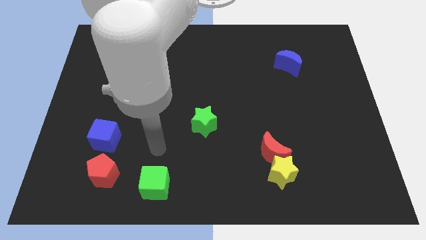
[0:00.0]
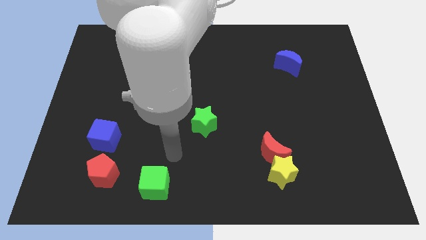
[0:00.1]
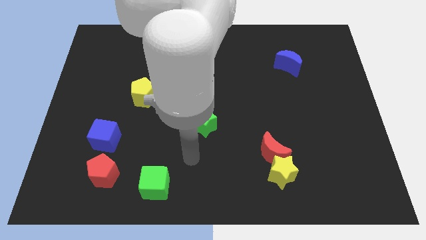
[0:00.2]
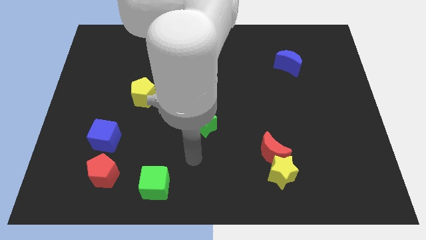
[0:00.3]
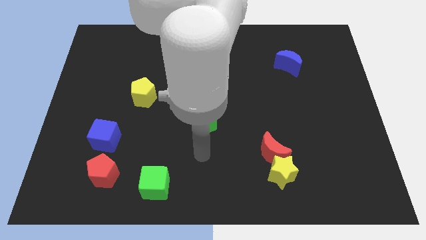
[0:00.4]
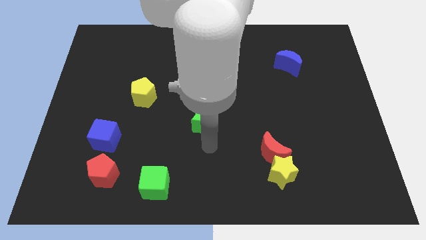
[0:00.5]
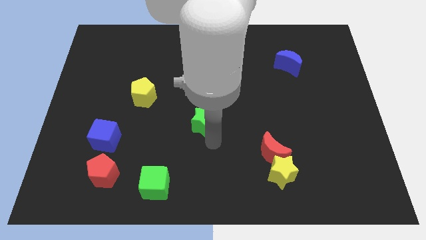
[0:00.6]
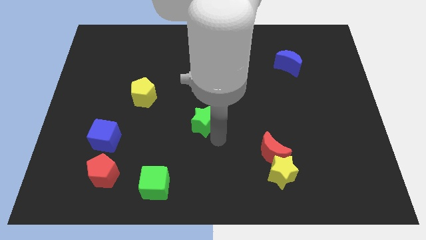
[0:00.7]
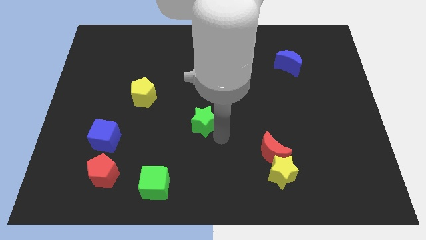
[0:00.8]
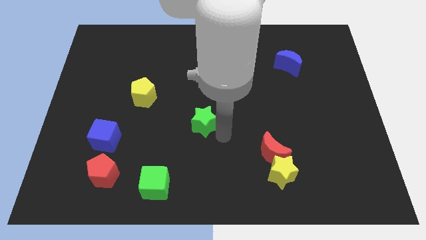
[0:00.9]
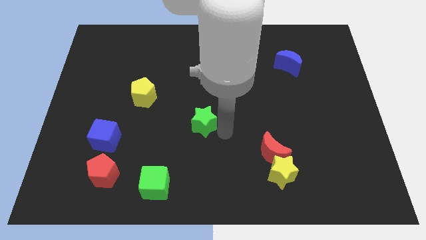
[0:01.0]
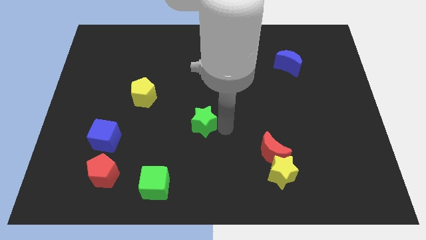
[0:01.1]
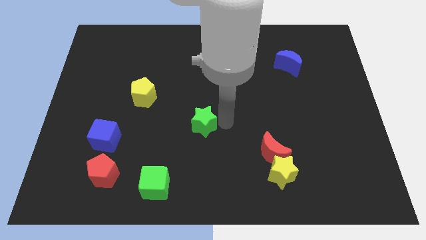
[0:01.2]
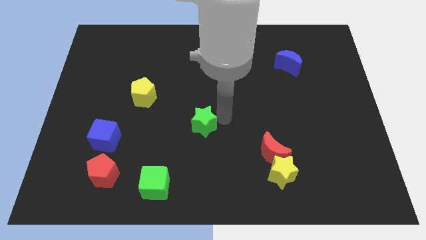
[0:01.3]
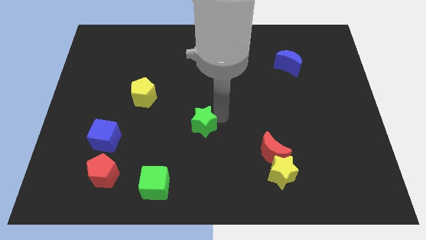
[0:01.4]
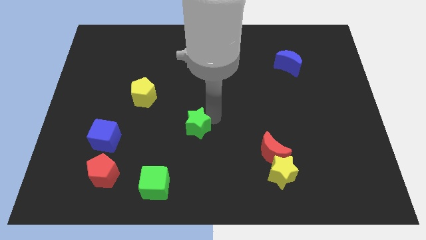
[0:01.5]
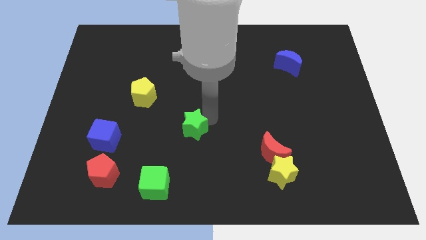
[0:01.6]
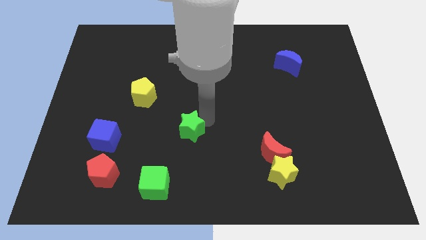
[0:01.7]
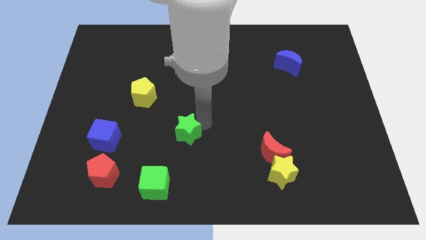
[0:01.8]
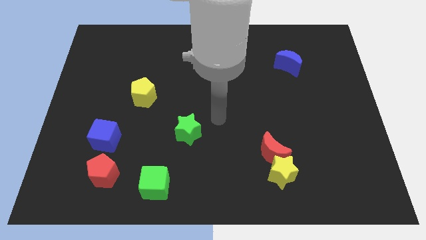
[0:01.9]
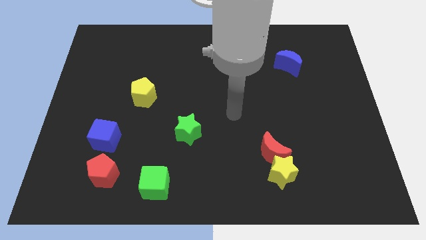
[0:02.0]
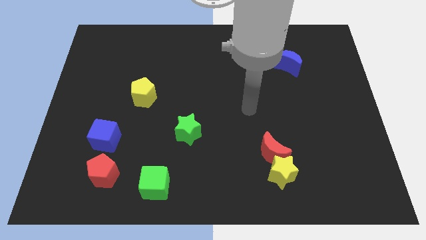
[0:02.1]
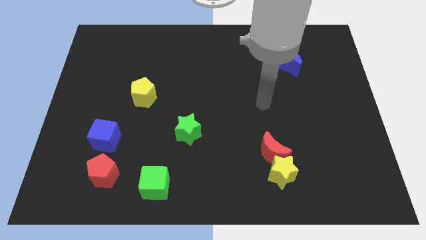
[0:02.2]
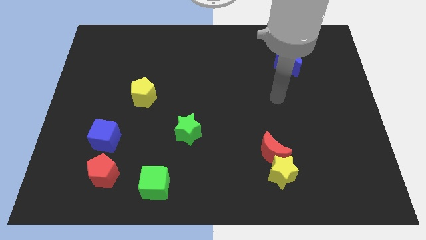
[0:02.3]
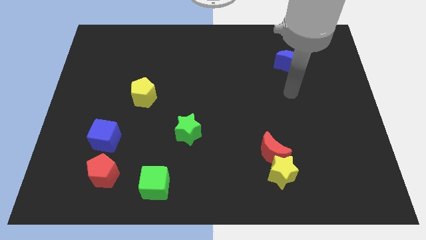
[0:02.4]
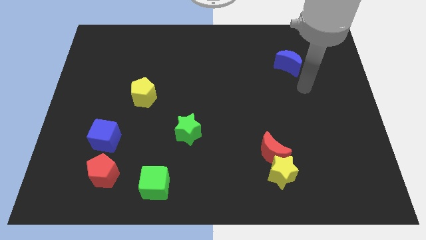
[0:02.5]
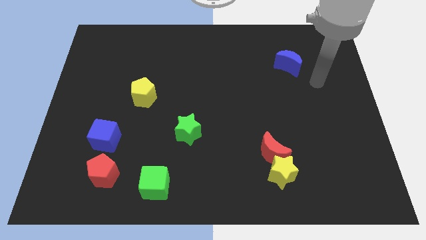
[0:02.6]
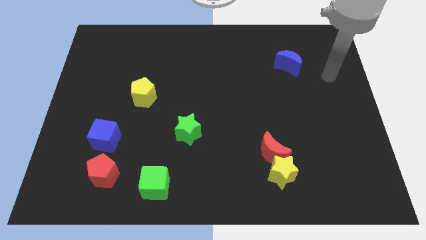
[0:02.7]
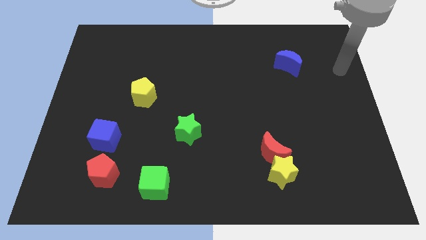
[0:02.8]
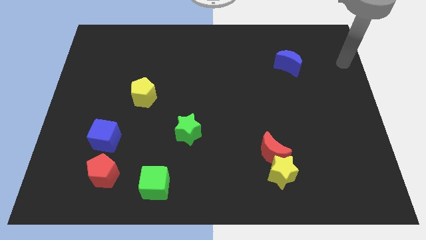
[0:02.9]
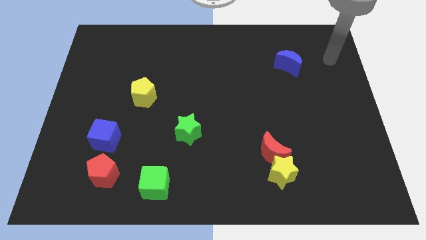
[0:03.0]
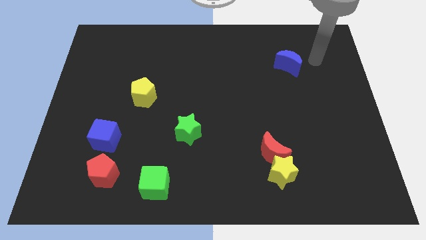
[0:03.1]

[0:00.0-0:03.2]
move the green star slightly towards the green cube

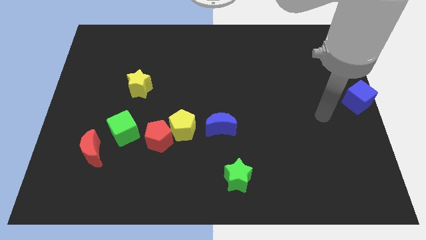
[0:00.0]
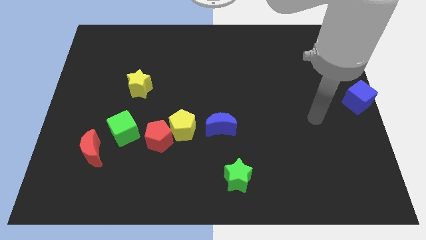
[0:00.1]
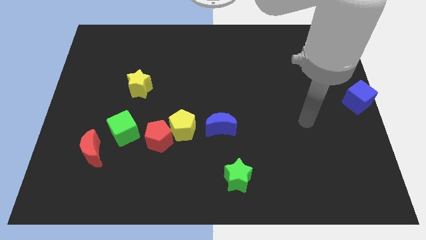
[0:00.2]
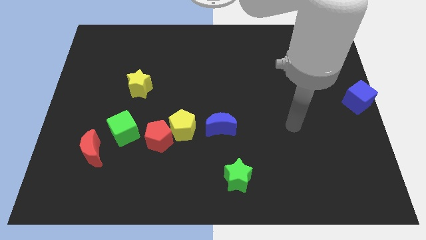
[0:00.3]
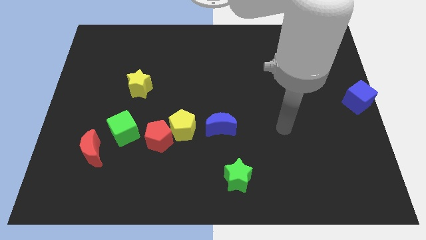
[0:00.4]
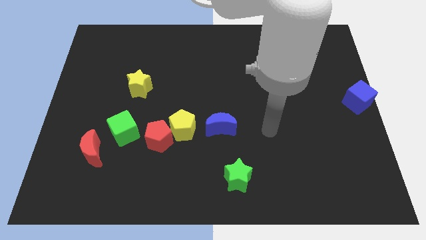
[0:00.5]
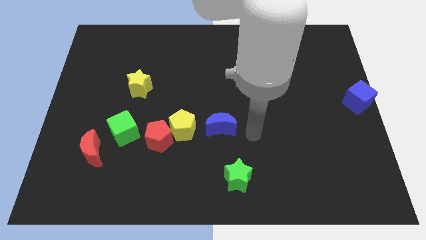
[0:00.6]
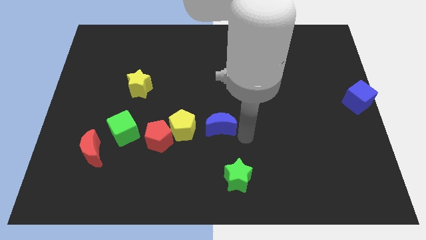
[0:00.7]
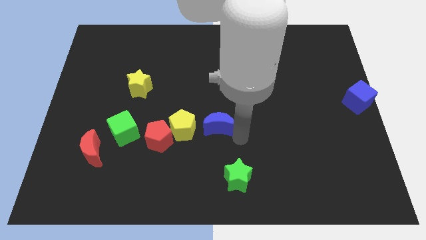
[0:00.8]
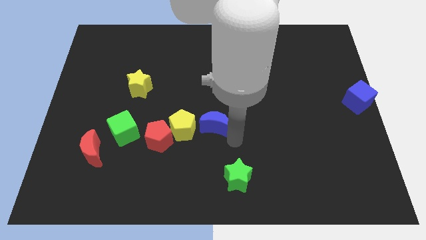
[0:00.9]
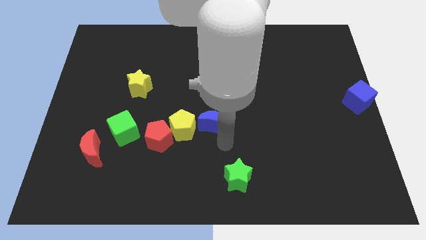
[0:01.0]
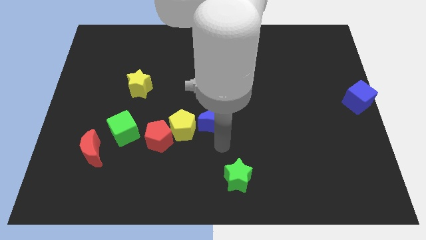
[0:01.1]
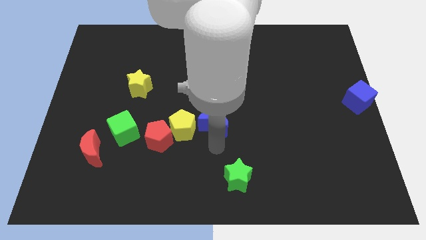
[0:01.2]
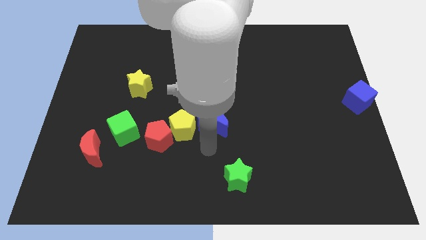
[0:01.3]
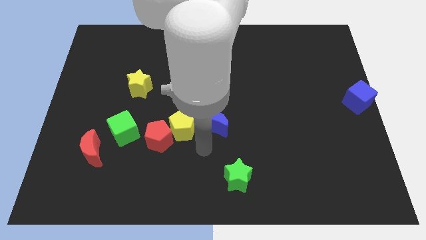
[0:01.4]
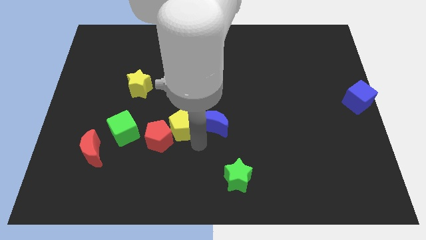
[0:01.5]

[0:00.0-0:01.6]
move the blue crescent slightly to the right of yellow pentagon

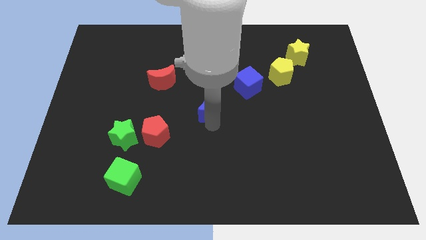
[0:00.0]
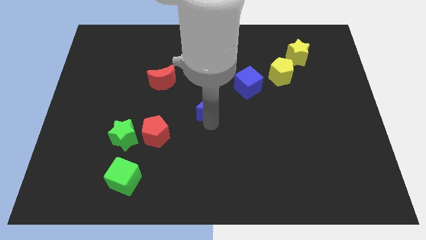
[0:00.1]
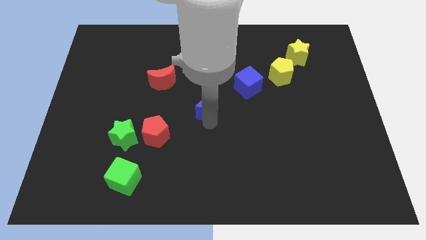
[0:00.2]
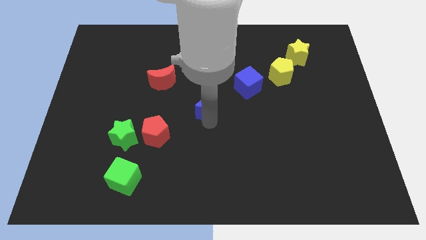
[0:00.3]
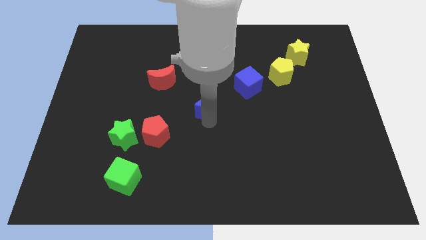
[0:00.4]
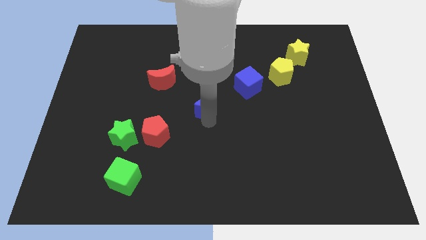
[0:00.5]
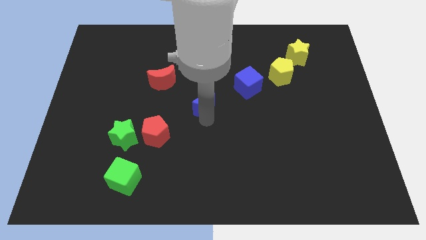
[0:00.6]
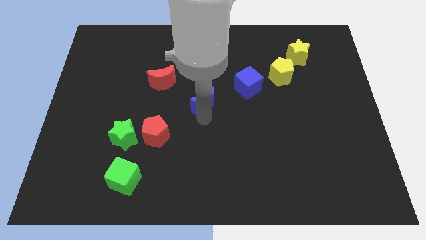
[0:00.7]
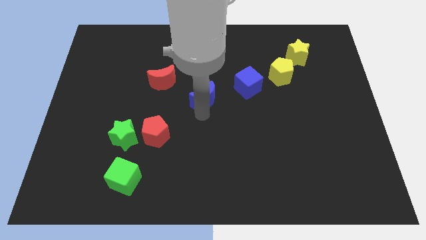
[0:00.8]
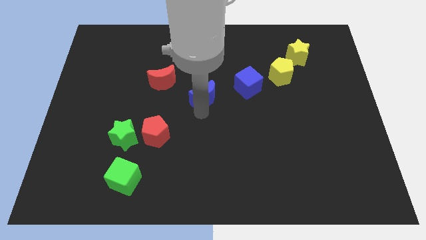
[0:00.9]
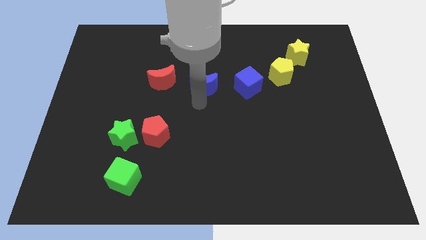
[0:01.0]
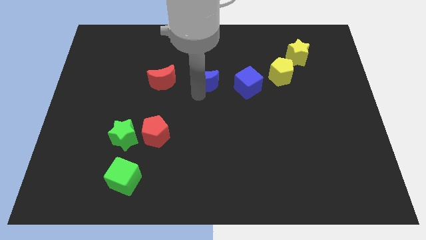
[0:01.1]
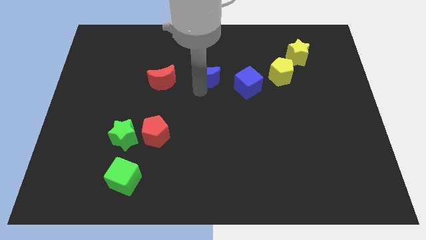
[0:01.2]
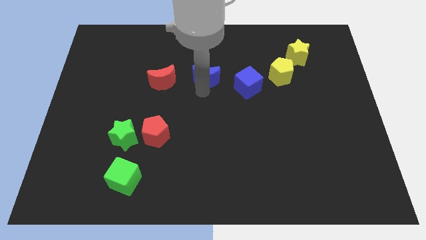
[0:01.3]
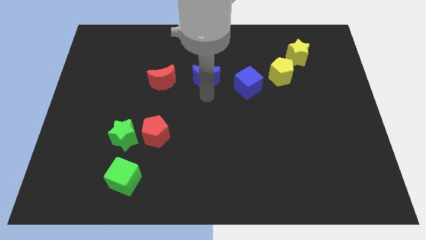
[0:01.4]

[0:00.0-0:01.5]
move the blue moon to the right of the red moon

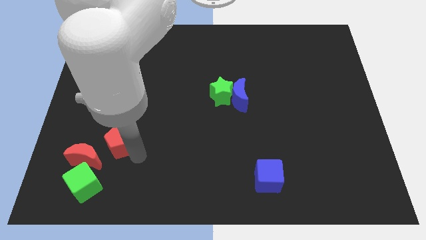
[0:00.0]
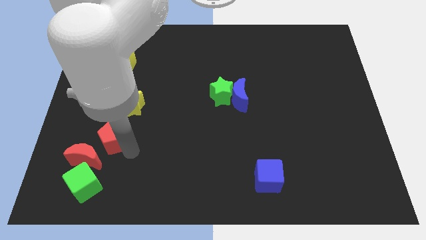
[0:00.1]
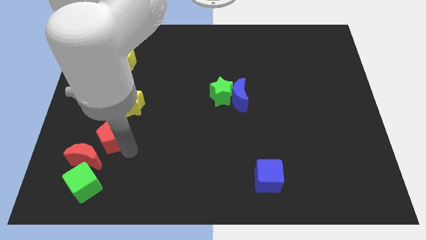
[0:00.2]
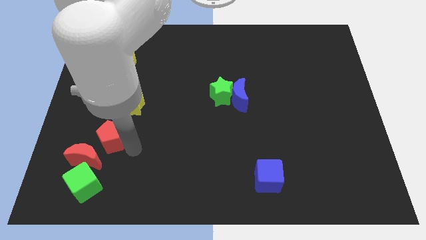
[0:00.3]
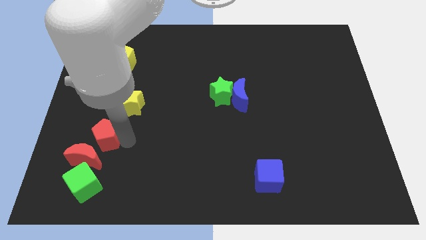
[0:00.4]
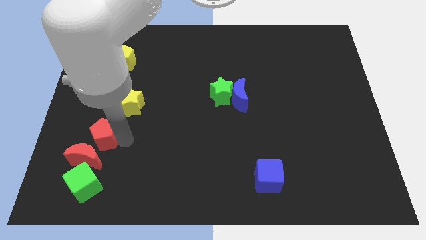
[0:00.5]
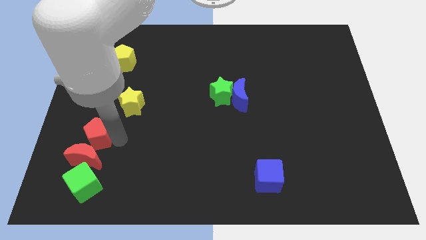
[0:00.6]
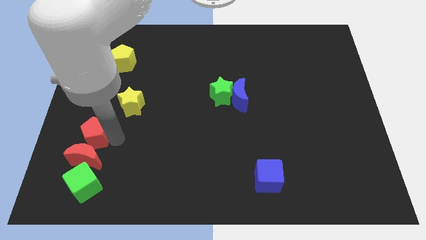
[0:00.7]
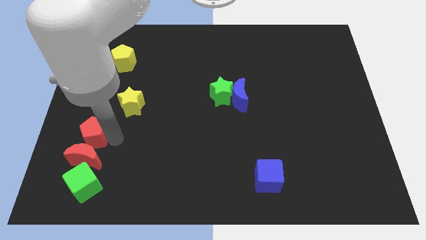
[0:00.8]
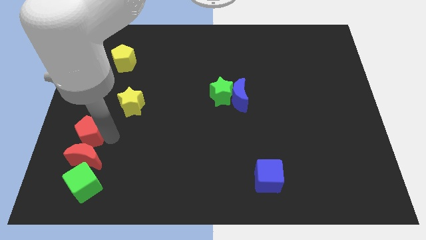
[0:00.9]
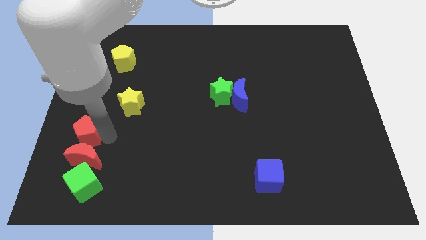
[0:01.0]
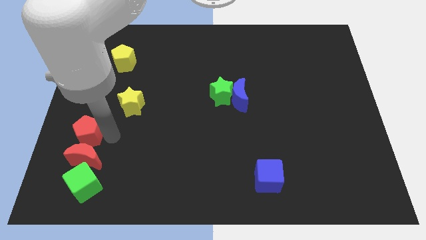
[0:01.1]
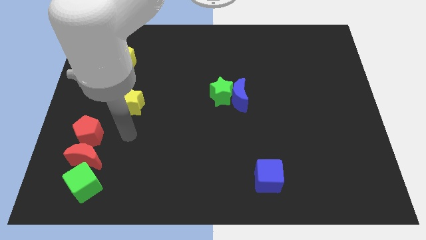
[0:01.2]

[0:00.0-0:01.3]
place the red pentagon above the red crescent

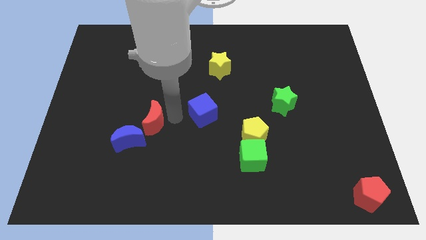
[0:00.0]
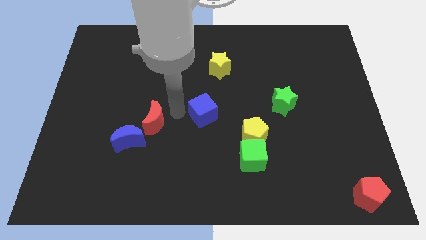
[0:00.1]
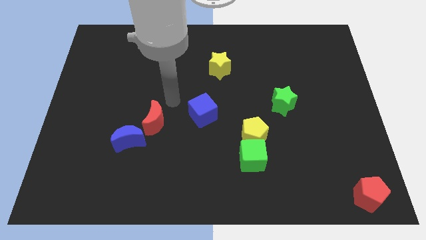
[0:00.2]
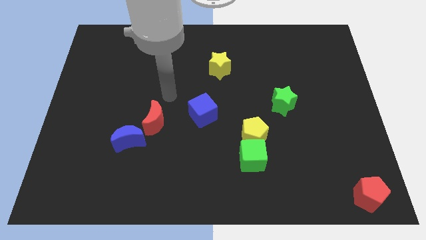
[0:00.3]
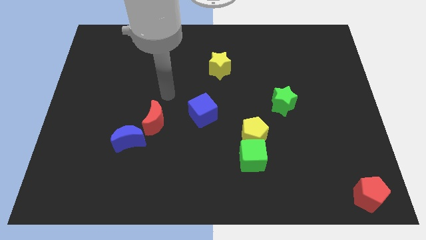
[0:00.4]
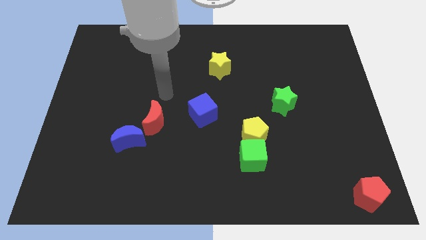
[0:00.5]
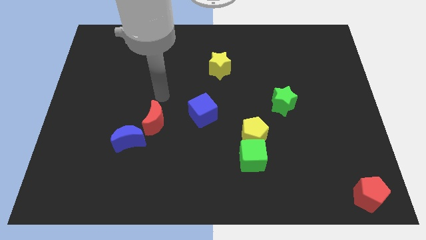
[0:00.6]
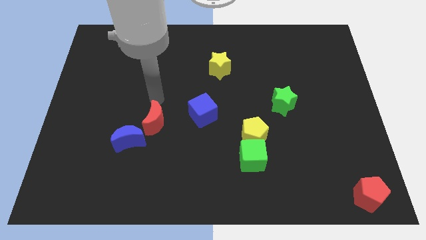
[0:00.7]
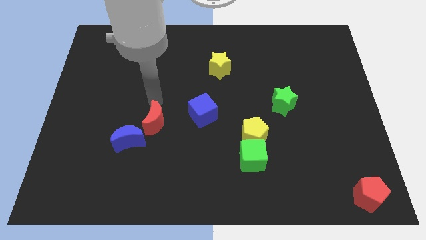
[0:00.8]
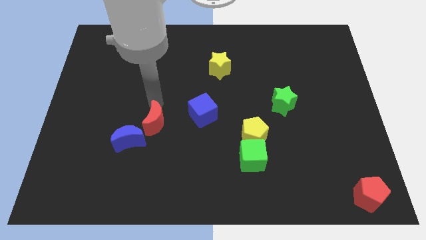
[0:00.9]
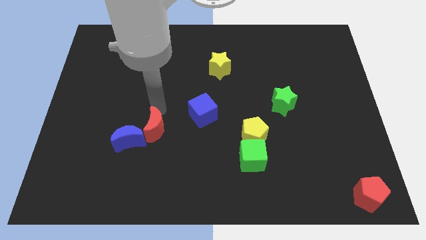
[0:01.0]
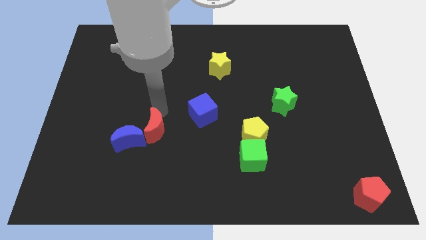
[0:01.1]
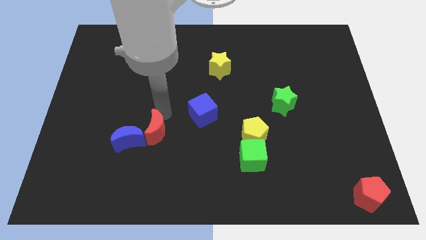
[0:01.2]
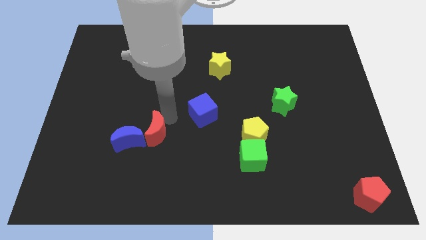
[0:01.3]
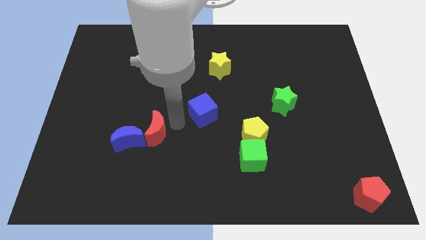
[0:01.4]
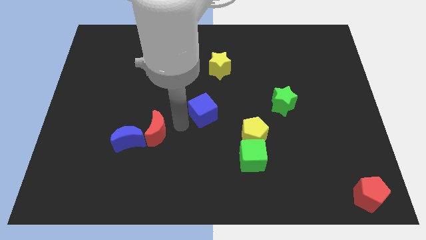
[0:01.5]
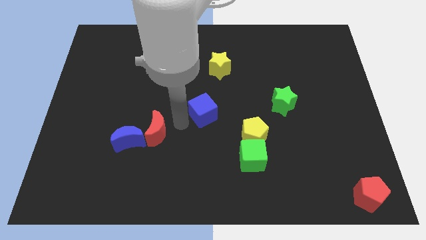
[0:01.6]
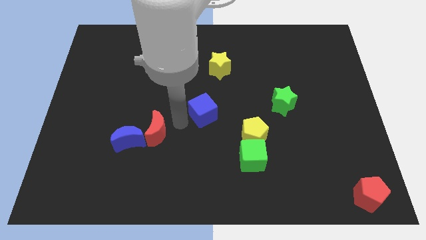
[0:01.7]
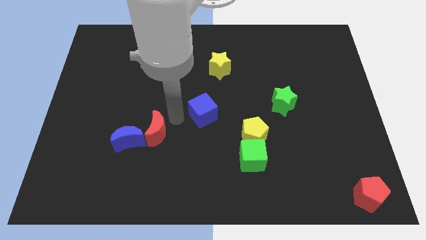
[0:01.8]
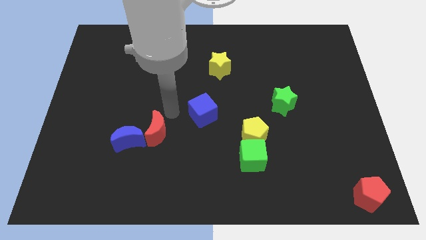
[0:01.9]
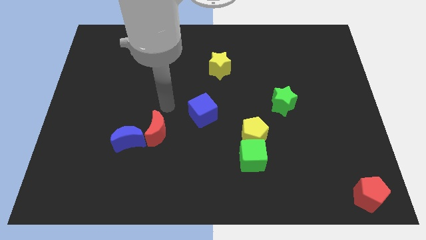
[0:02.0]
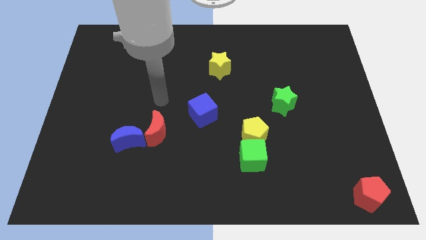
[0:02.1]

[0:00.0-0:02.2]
move red moon to the right of blue moon
